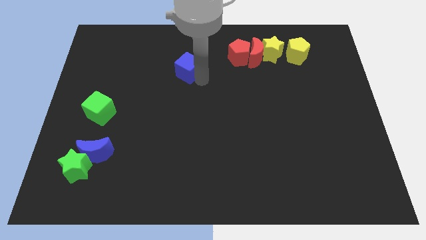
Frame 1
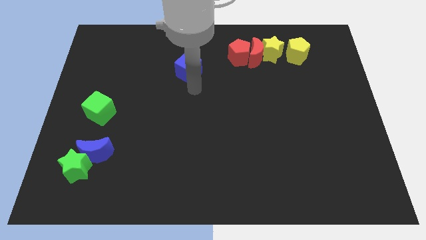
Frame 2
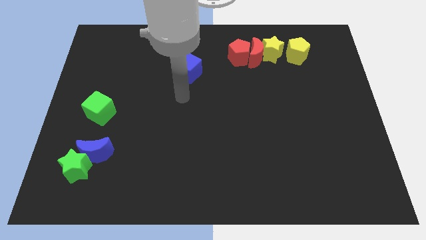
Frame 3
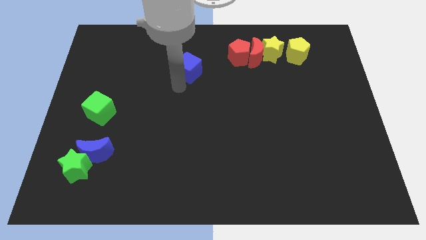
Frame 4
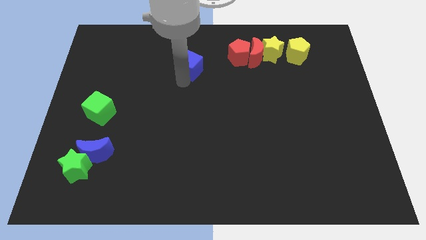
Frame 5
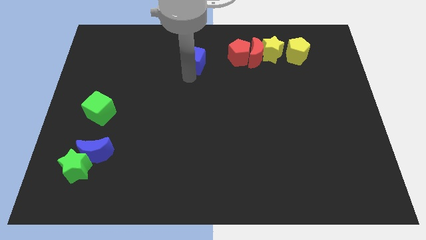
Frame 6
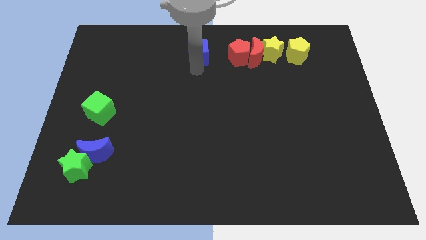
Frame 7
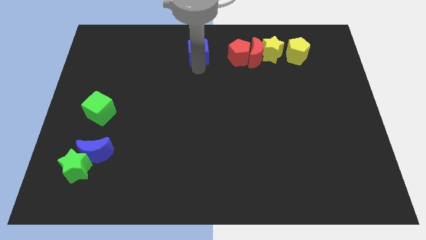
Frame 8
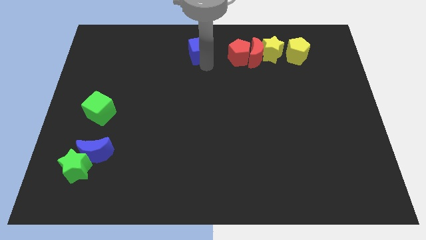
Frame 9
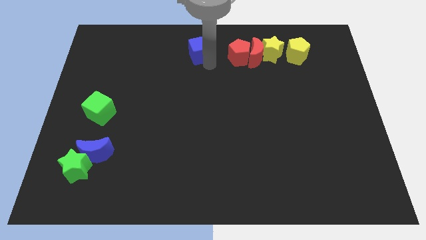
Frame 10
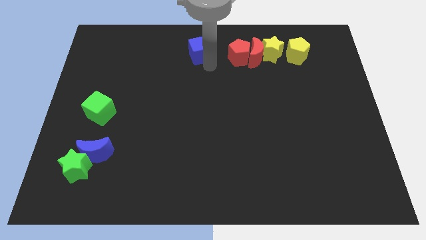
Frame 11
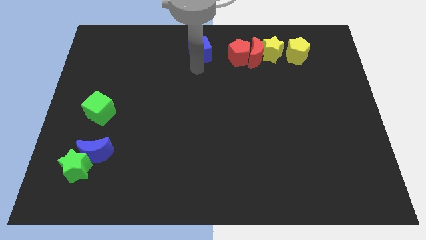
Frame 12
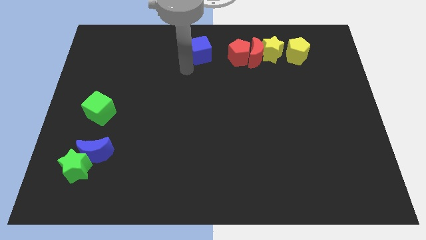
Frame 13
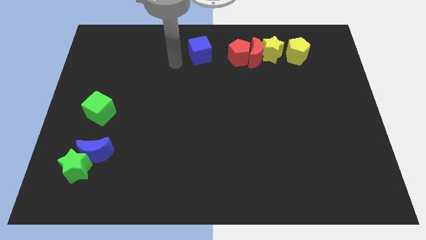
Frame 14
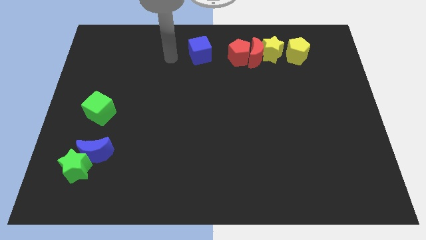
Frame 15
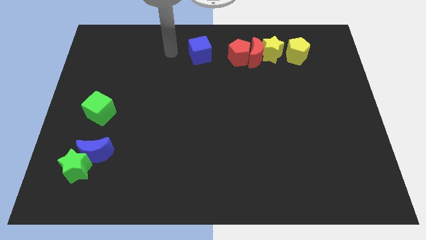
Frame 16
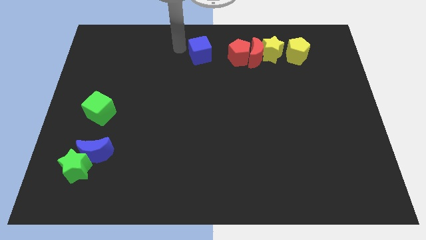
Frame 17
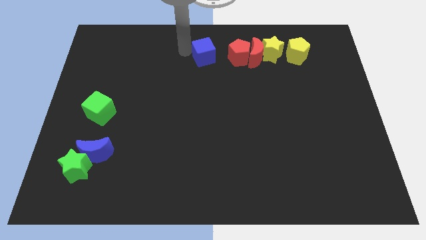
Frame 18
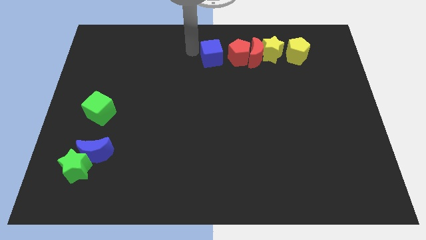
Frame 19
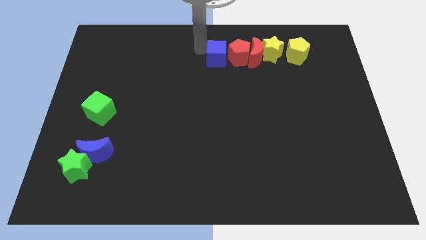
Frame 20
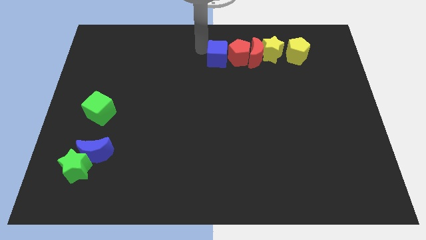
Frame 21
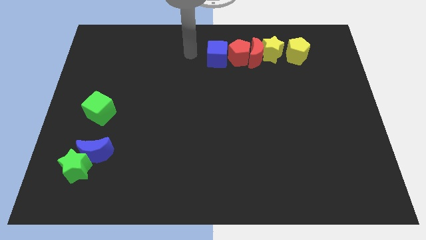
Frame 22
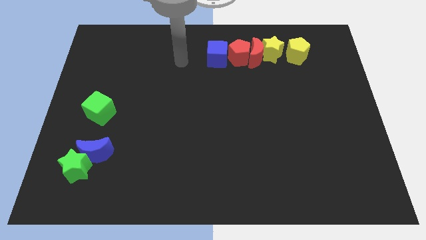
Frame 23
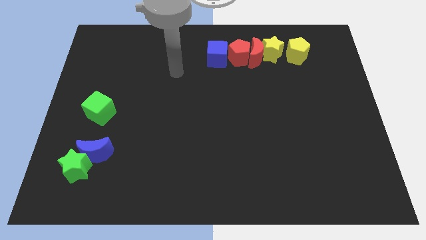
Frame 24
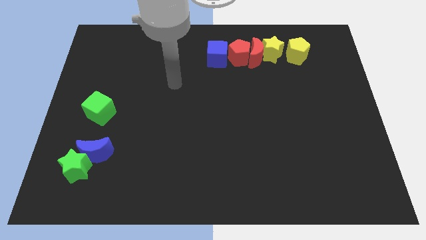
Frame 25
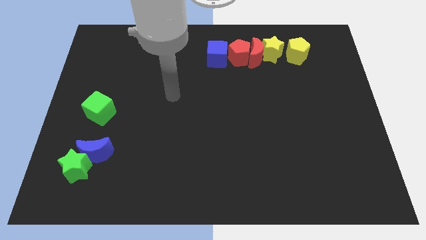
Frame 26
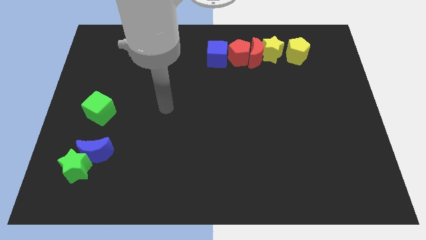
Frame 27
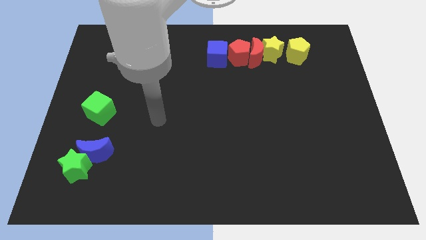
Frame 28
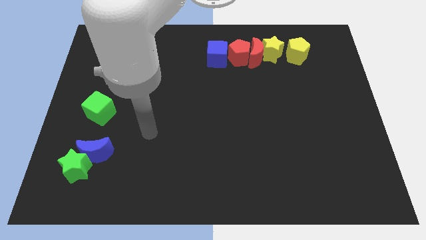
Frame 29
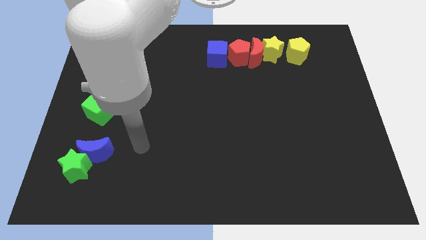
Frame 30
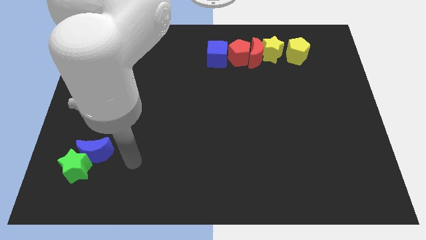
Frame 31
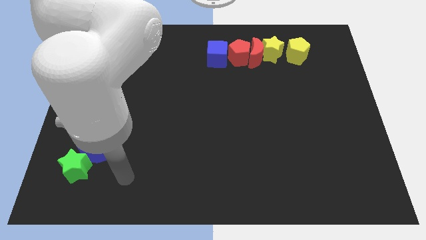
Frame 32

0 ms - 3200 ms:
place the blue cube beside the left side of the red pentagon

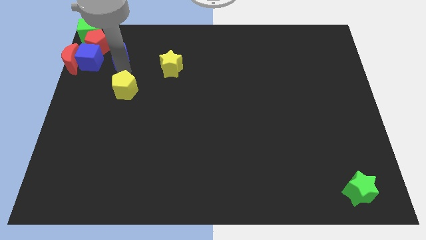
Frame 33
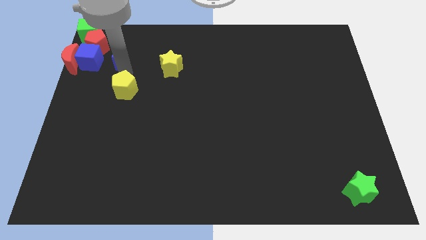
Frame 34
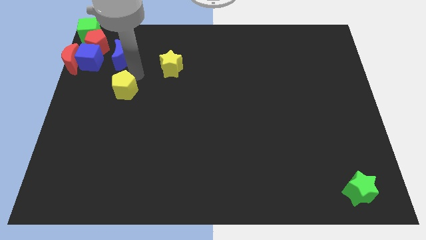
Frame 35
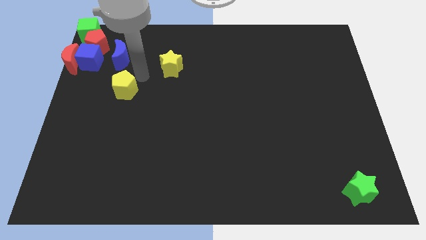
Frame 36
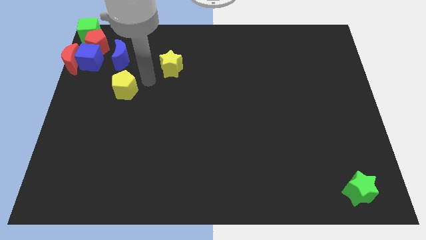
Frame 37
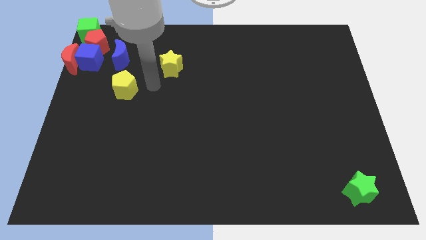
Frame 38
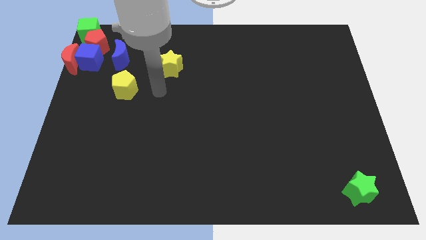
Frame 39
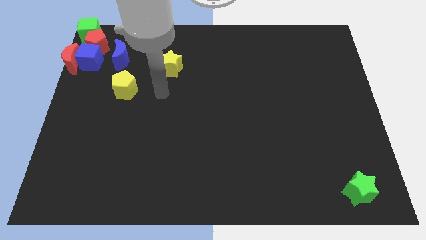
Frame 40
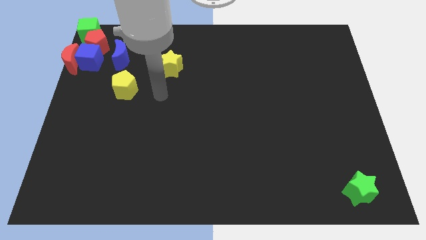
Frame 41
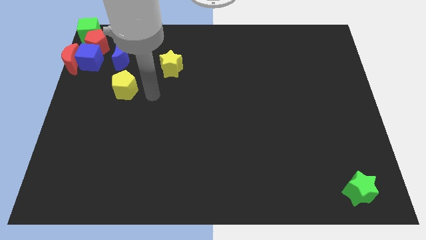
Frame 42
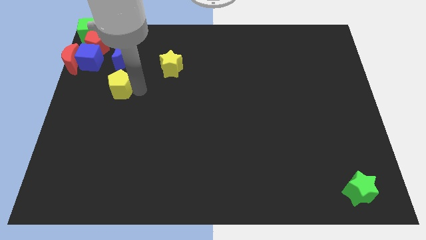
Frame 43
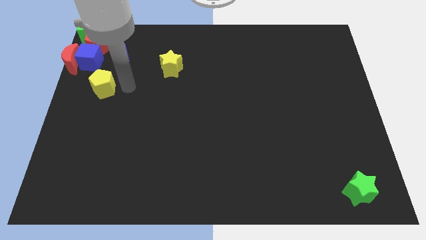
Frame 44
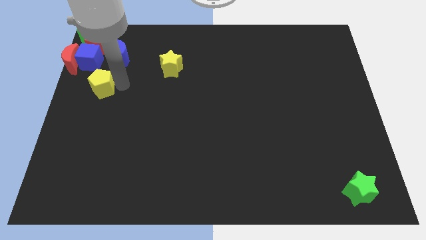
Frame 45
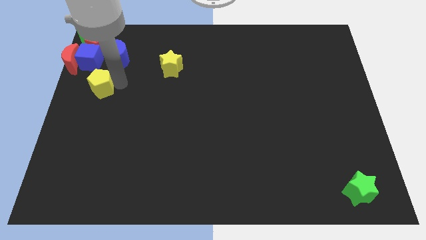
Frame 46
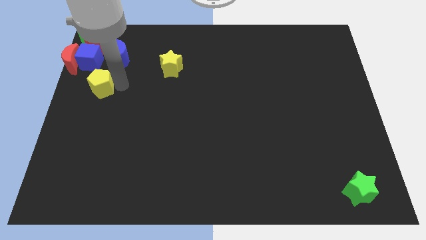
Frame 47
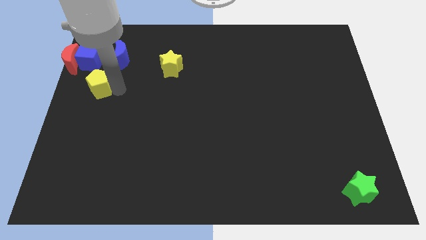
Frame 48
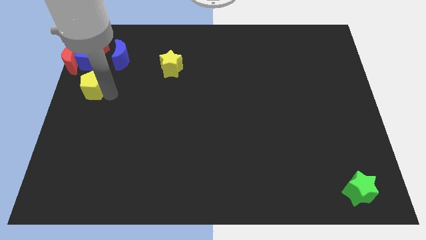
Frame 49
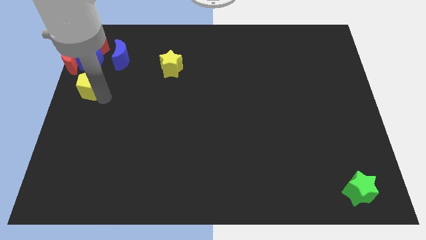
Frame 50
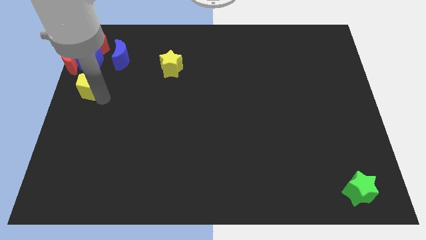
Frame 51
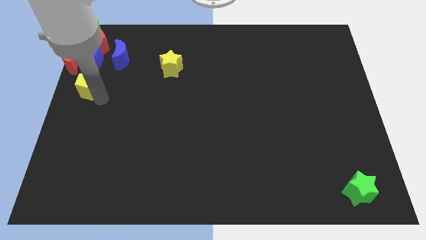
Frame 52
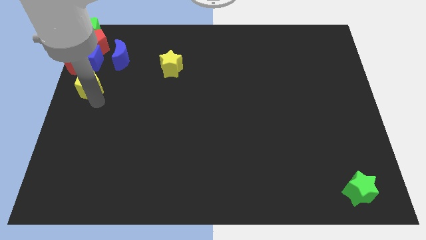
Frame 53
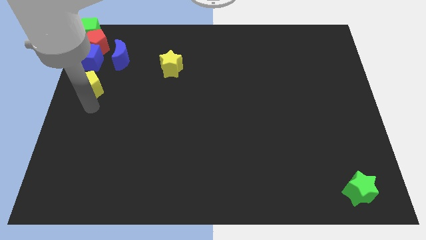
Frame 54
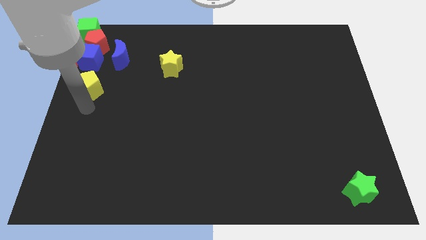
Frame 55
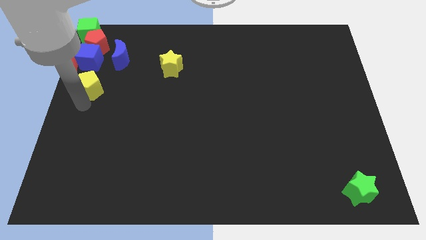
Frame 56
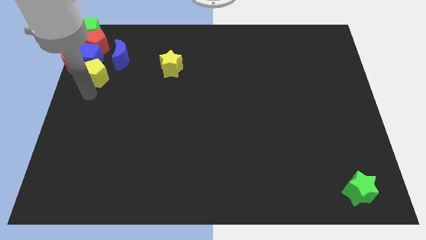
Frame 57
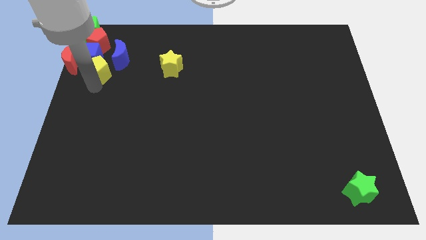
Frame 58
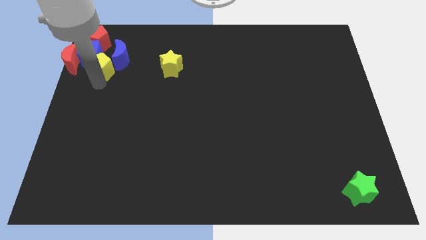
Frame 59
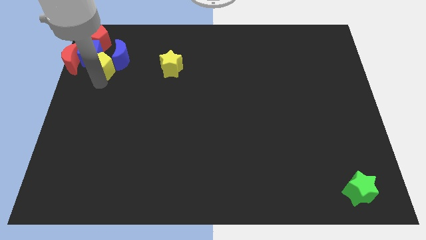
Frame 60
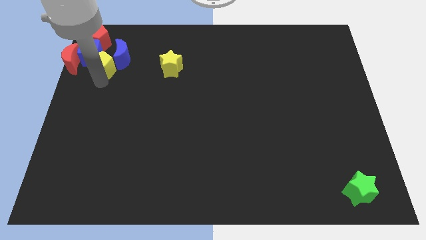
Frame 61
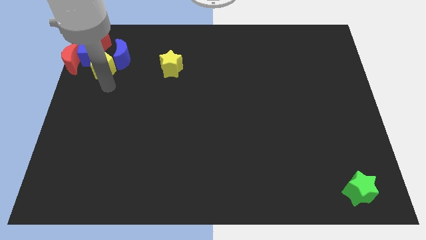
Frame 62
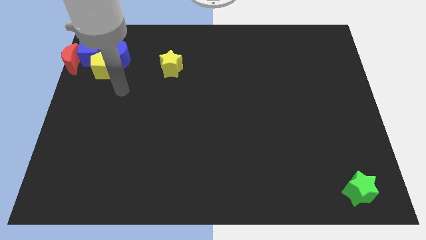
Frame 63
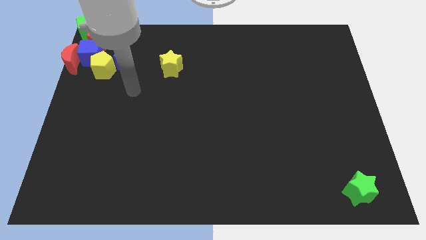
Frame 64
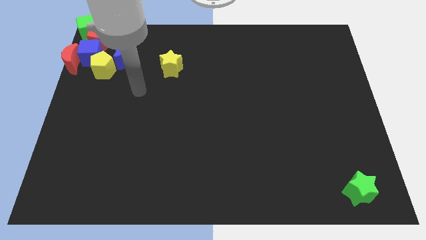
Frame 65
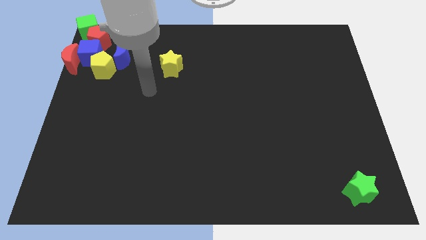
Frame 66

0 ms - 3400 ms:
move the yellow pentagon towards the blue cube

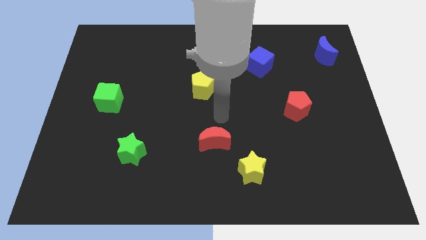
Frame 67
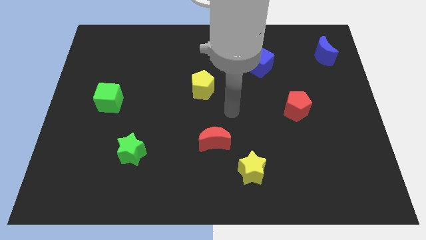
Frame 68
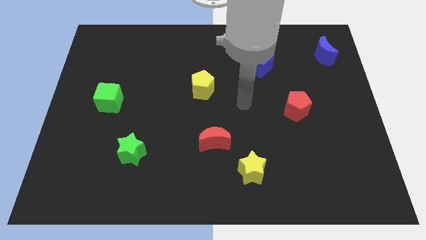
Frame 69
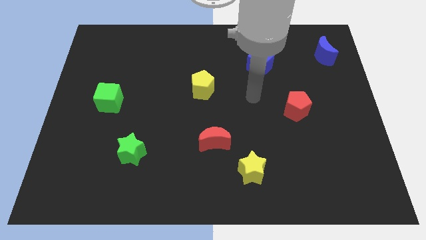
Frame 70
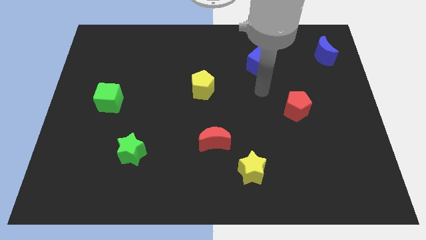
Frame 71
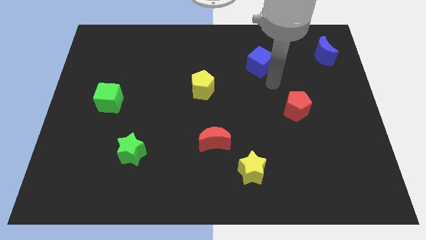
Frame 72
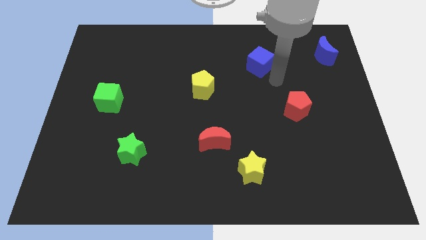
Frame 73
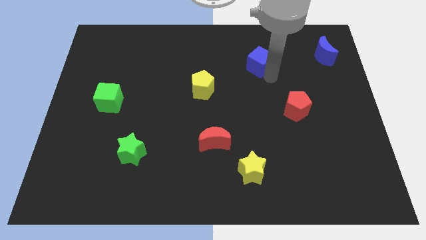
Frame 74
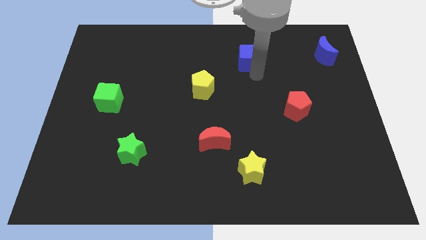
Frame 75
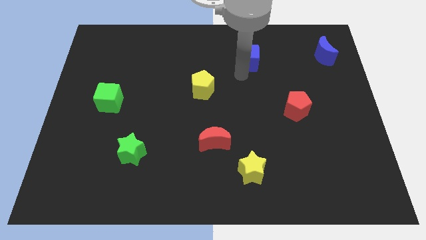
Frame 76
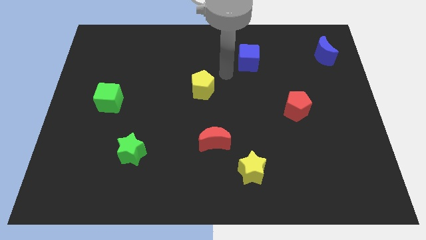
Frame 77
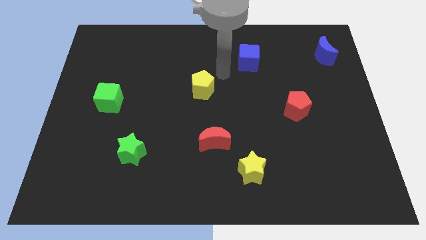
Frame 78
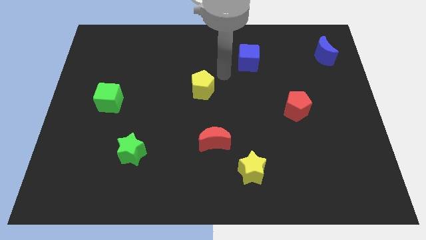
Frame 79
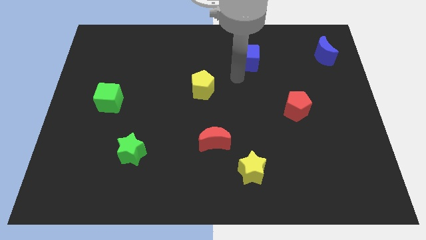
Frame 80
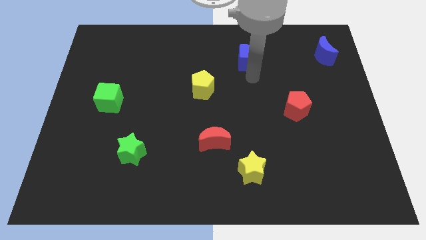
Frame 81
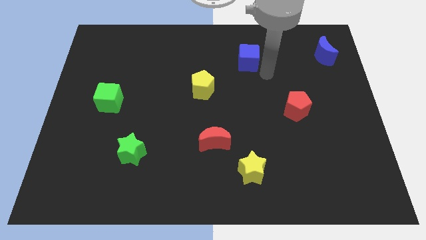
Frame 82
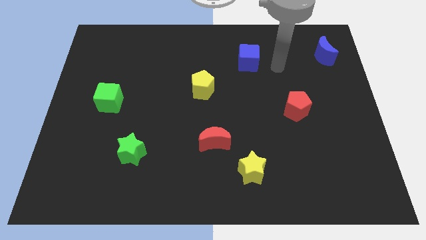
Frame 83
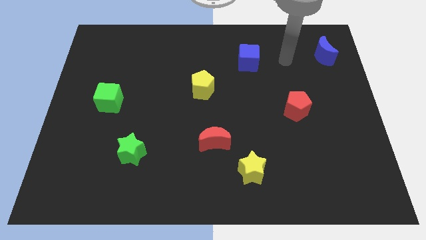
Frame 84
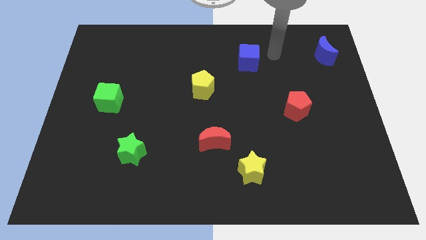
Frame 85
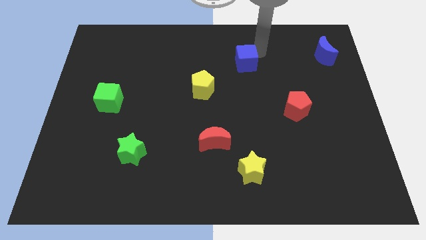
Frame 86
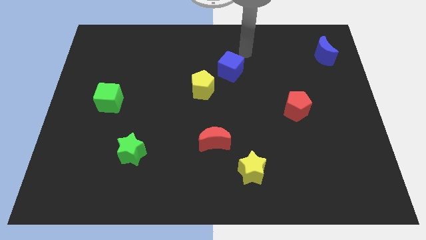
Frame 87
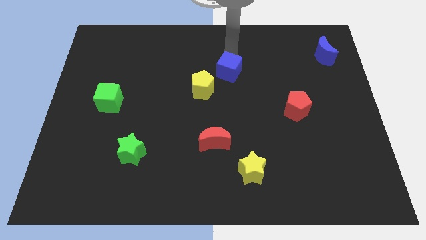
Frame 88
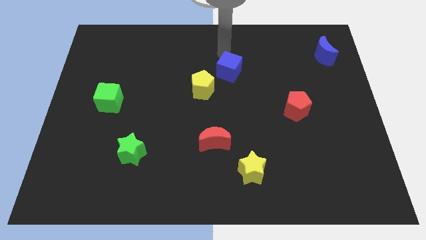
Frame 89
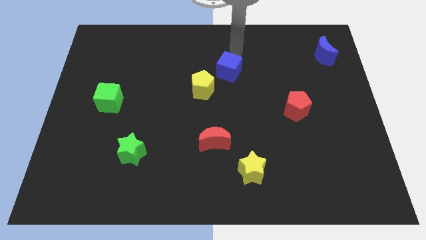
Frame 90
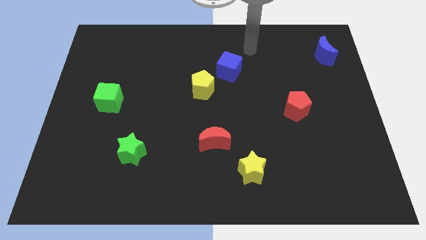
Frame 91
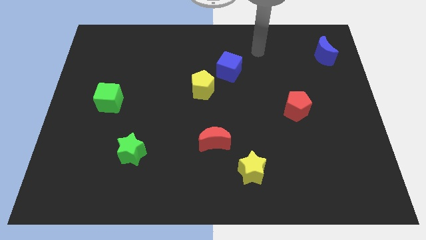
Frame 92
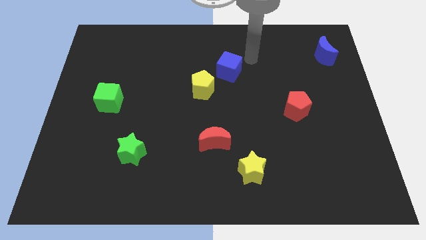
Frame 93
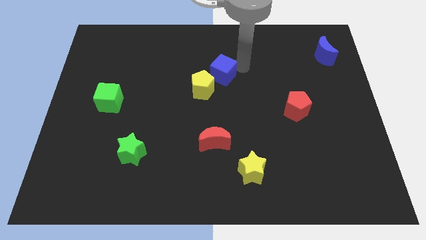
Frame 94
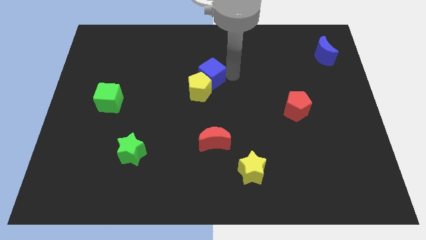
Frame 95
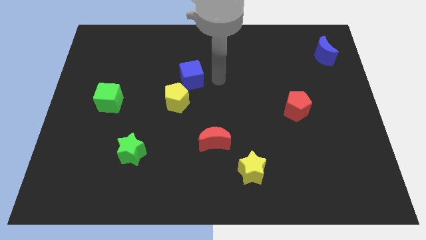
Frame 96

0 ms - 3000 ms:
move blue cube into the yellow pentagon
